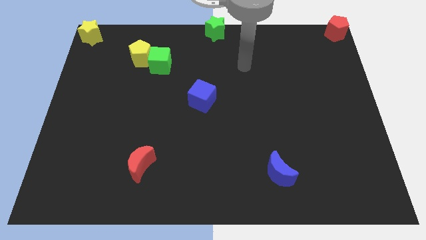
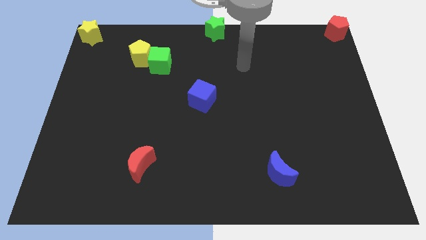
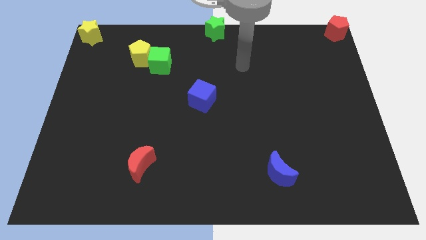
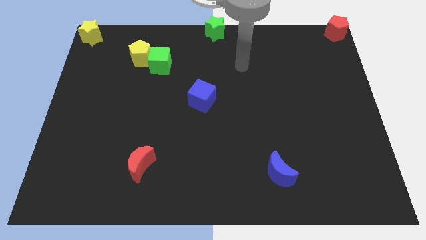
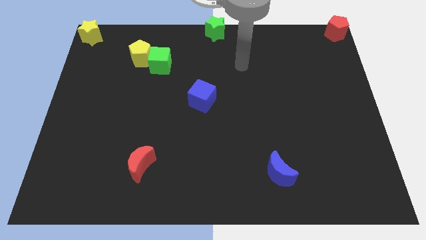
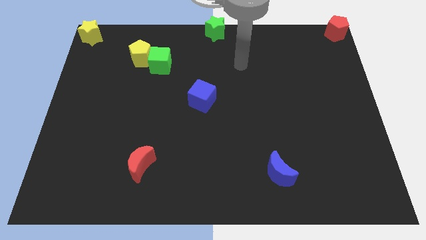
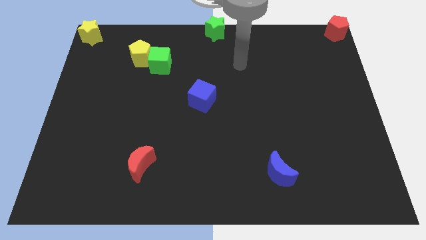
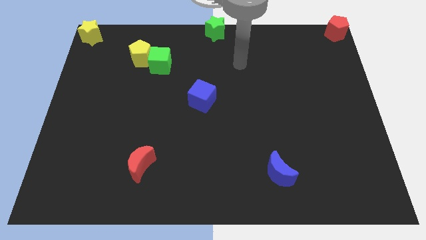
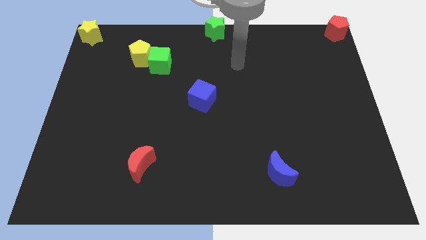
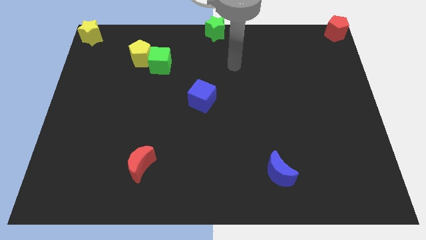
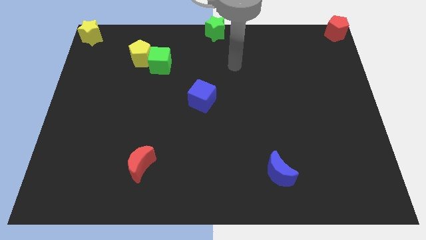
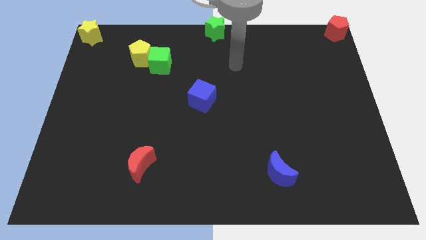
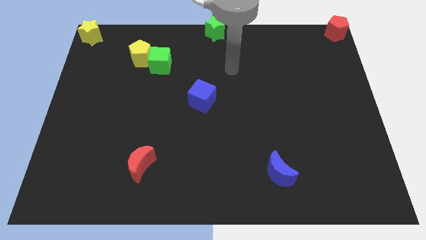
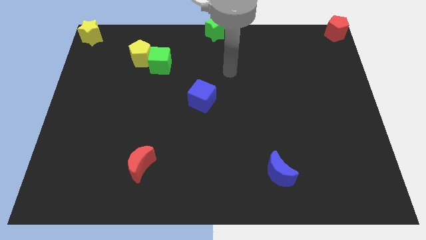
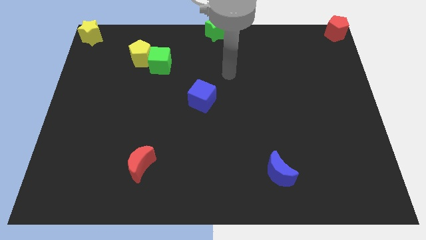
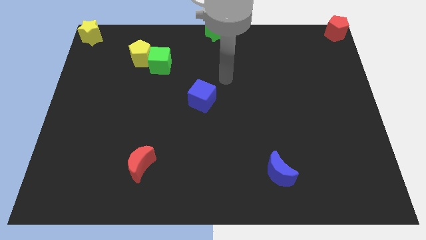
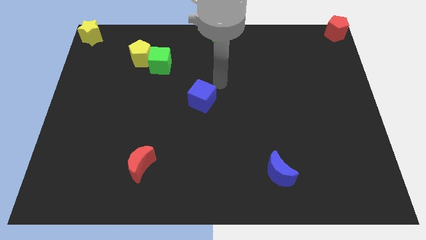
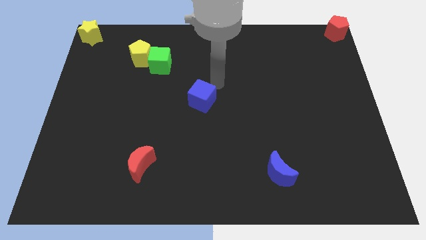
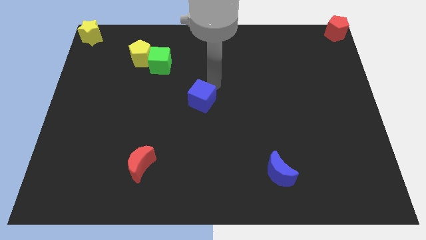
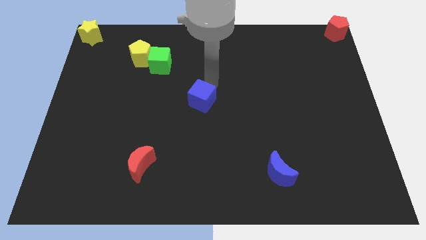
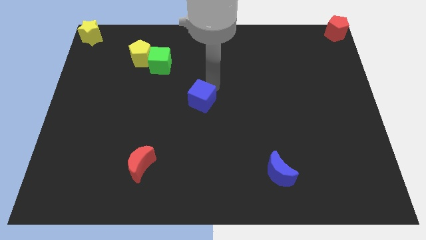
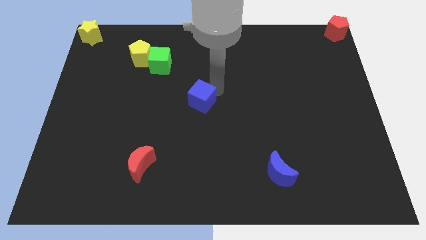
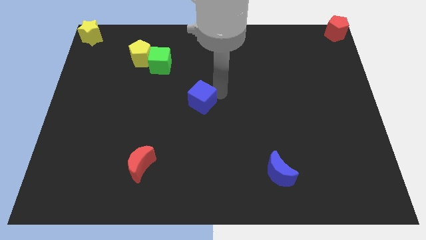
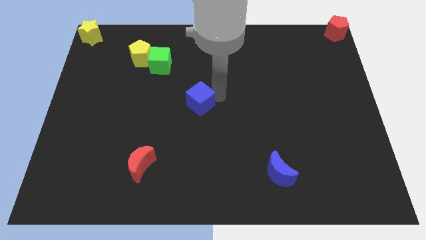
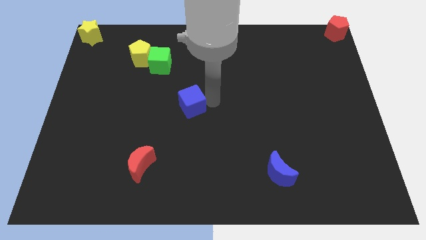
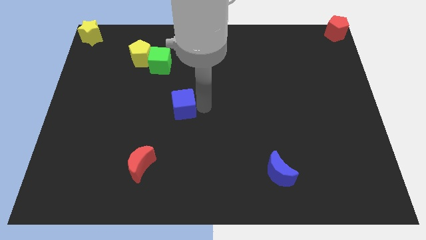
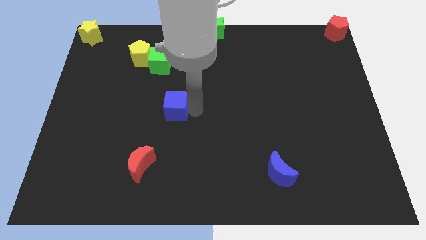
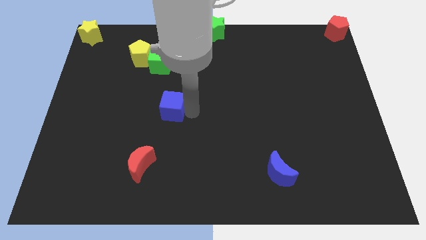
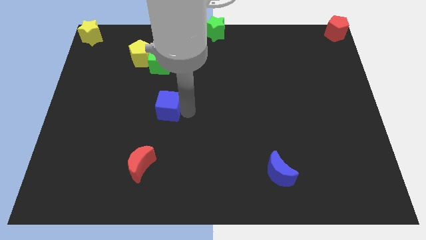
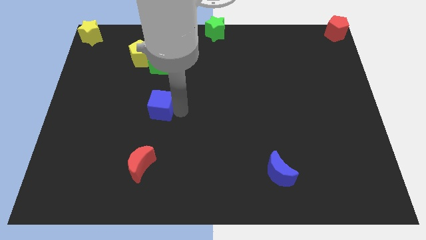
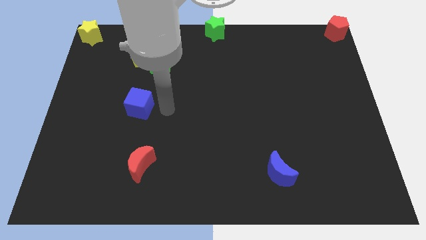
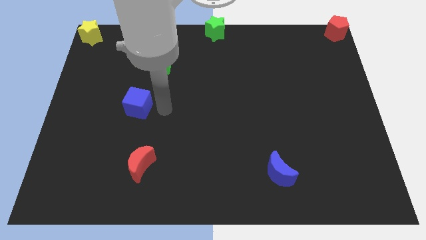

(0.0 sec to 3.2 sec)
push the blue cube towards the center left side of the board

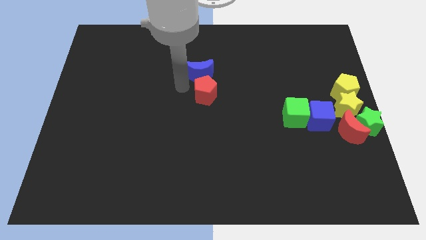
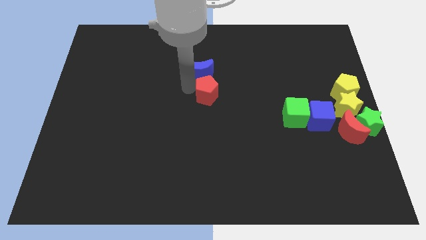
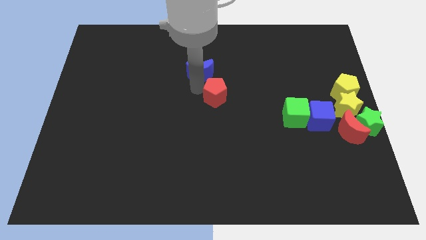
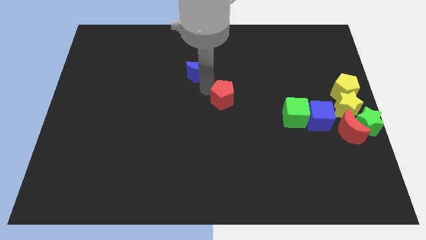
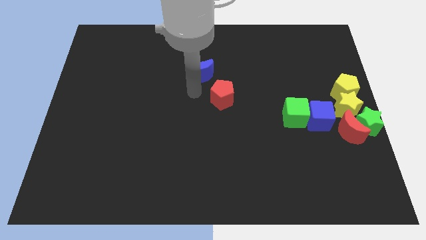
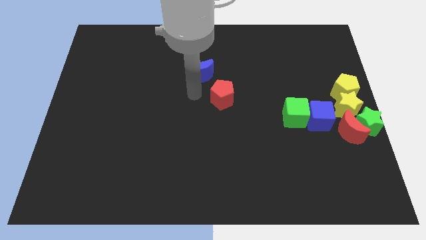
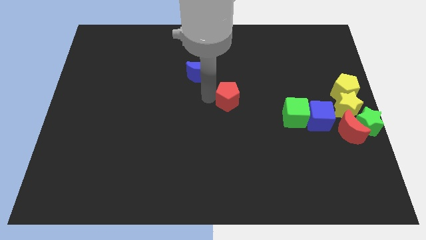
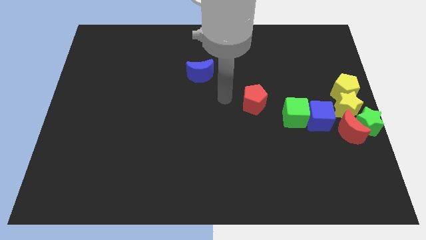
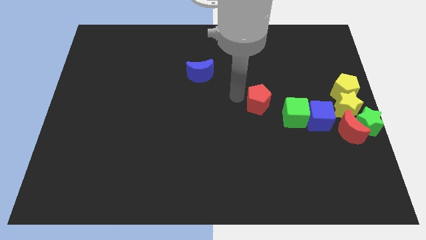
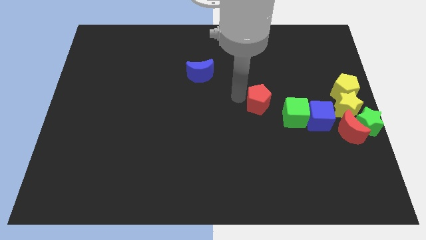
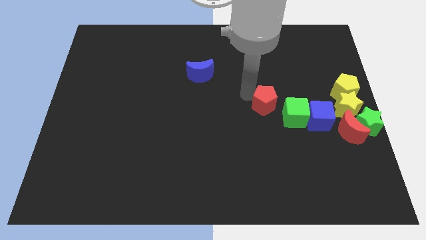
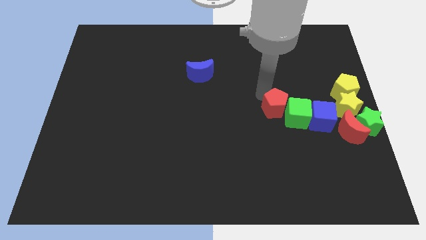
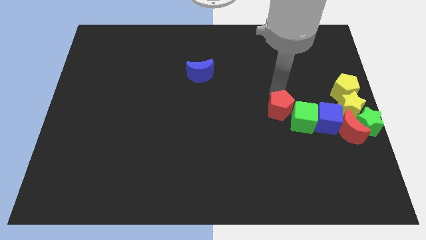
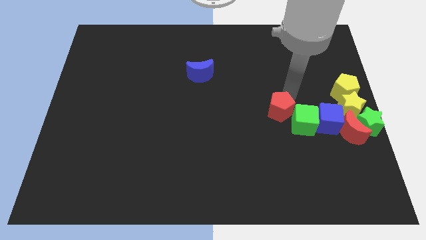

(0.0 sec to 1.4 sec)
move the red pentagon into the green cube

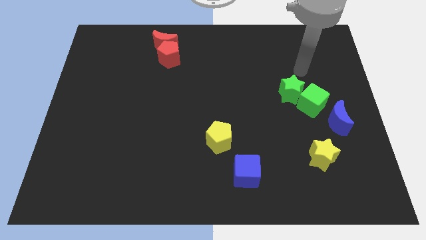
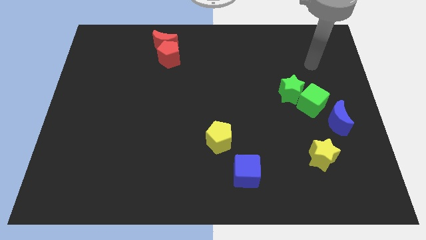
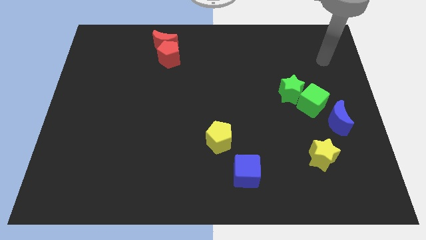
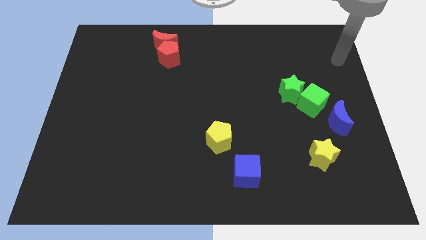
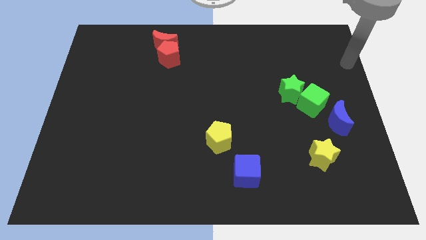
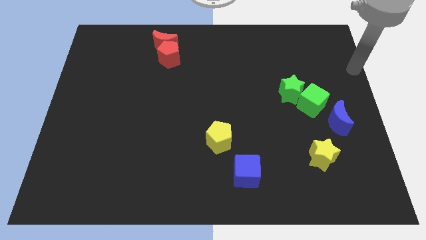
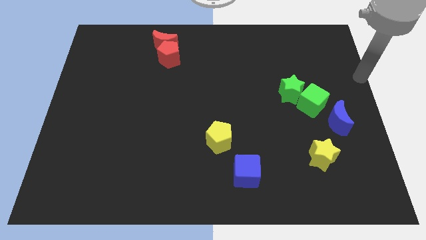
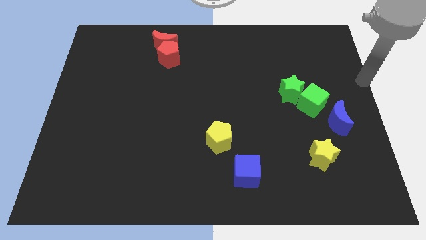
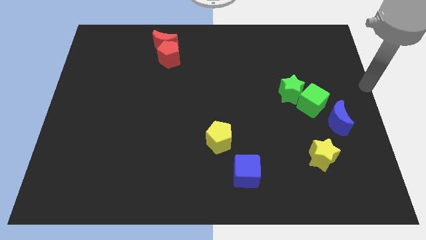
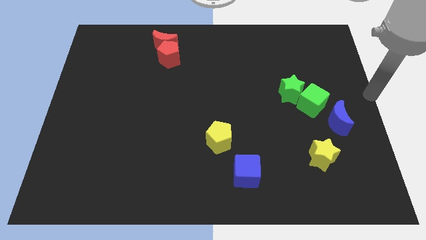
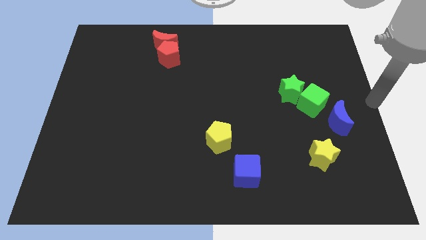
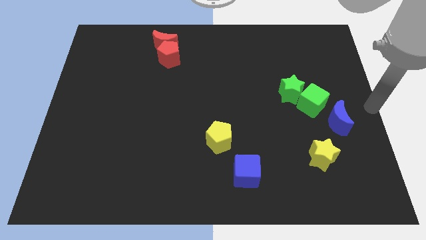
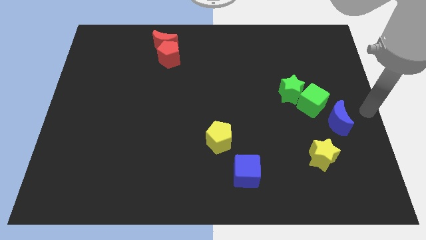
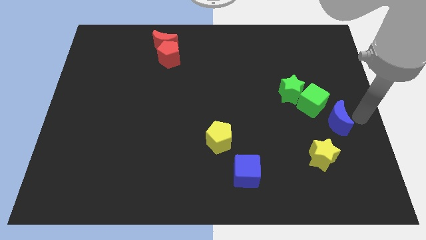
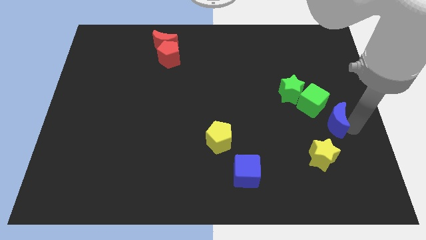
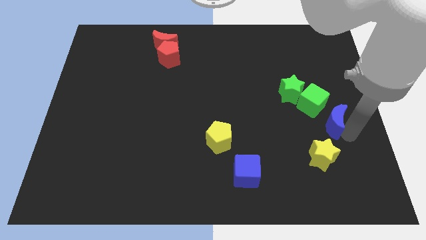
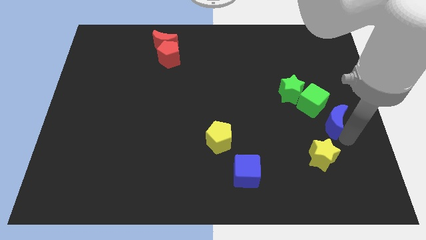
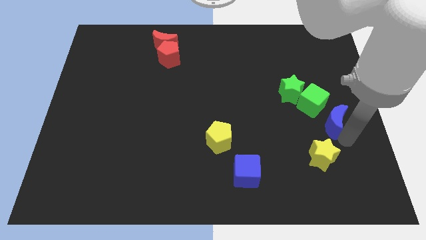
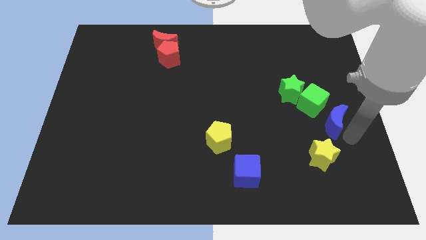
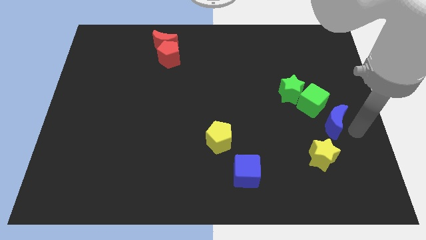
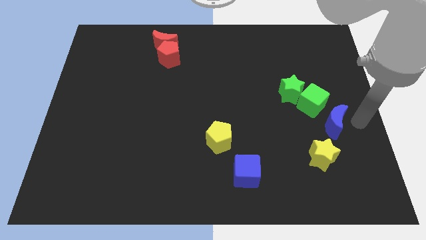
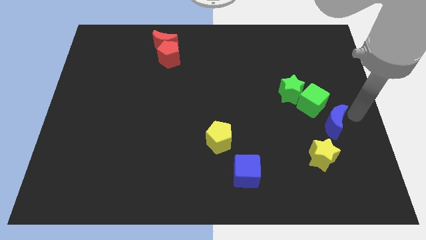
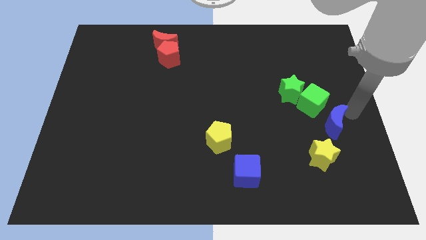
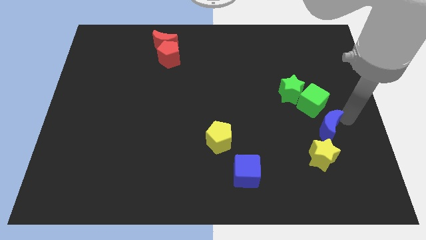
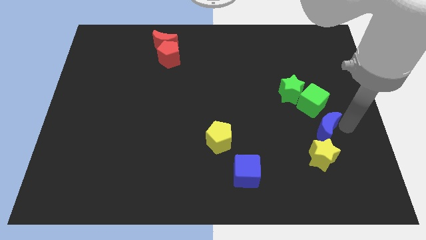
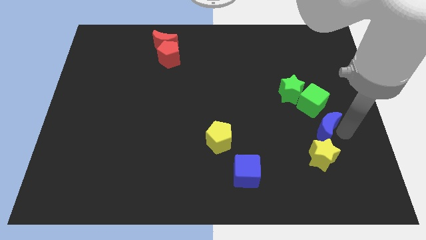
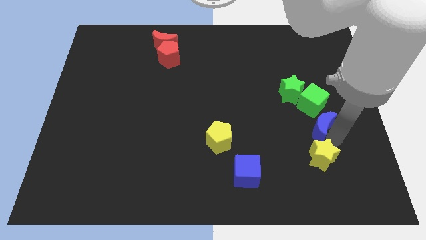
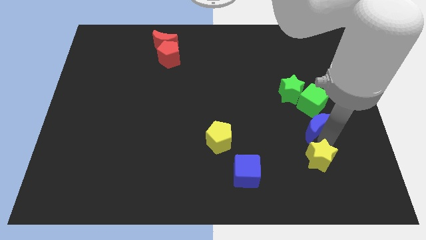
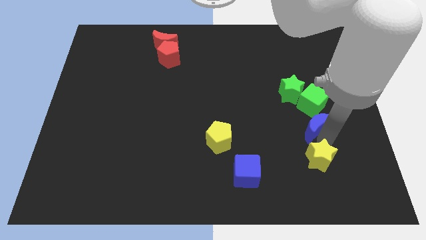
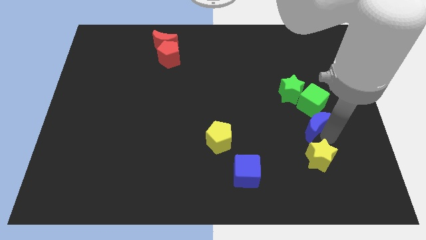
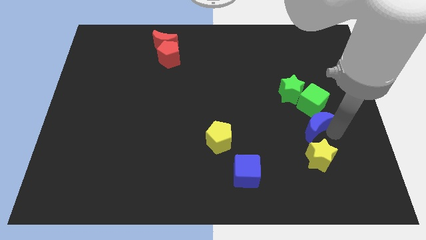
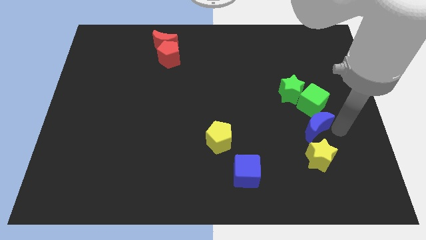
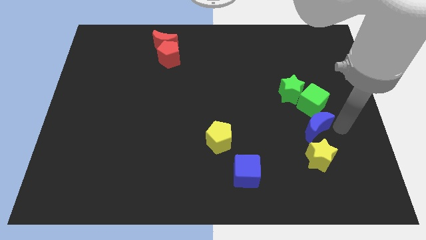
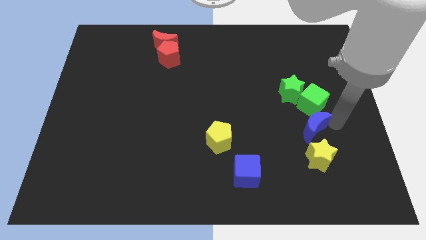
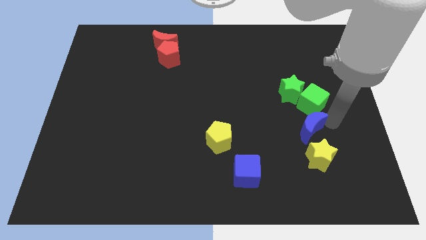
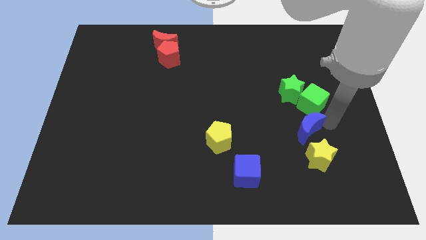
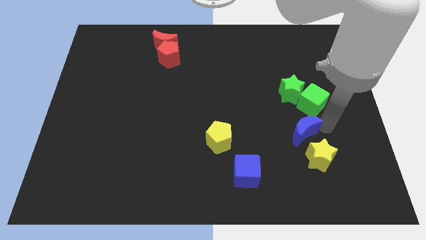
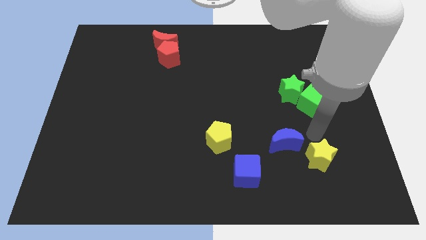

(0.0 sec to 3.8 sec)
put the blue crescent below the green cube

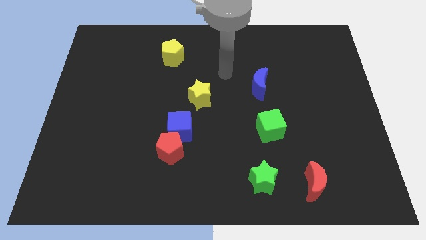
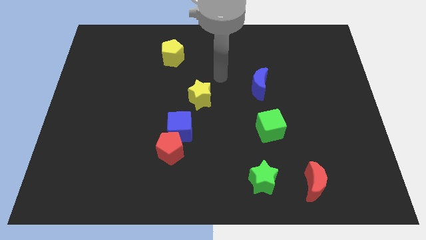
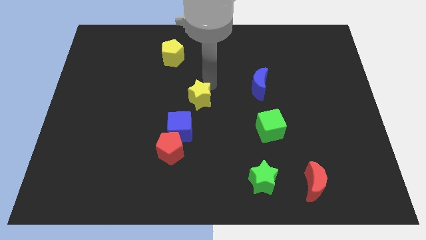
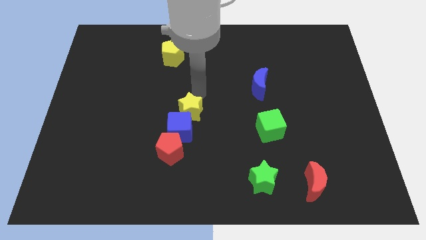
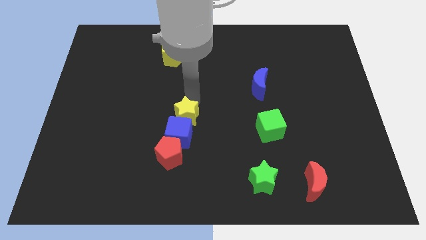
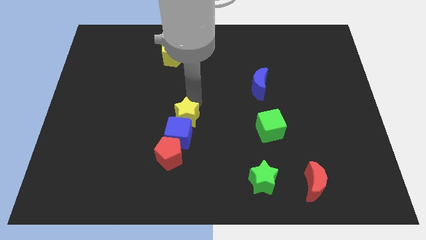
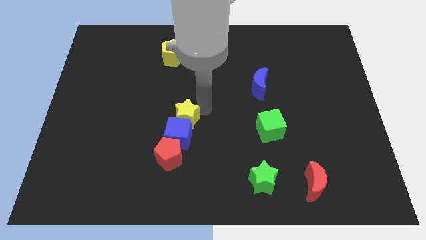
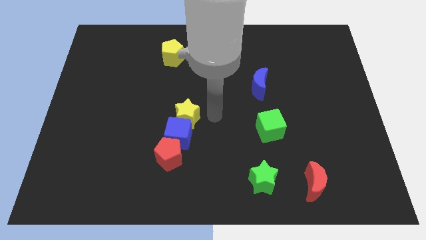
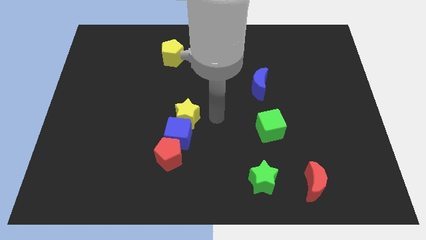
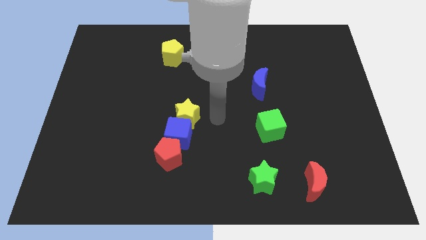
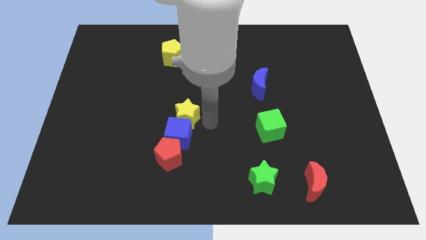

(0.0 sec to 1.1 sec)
push the yellow star into the blue cube
